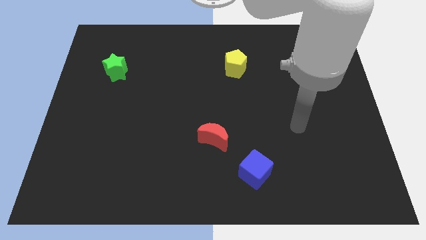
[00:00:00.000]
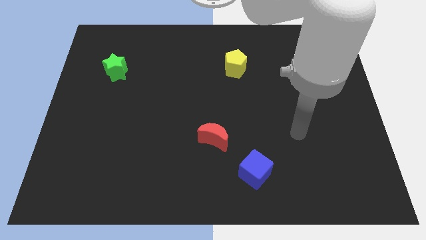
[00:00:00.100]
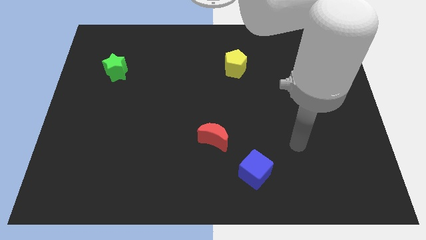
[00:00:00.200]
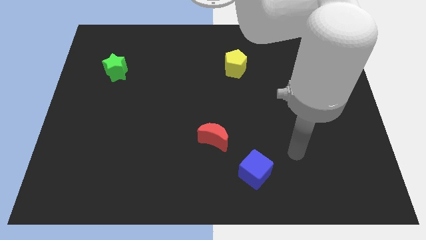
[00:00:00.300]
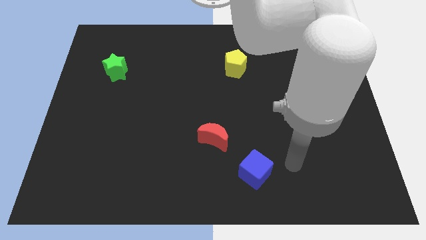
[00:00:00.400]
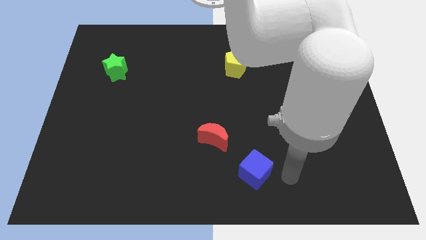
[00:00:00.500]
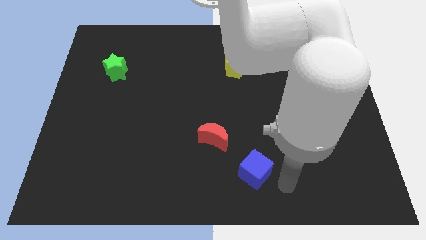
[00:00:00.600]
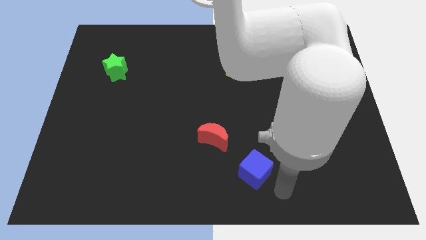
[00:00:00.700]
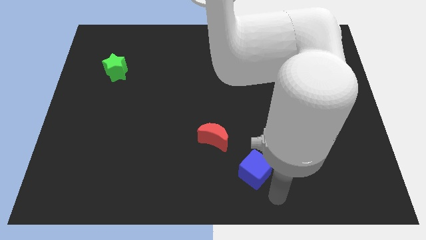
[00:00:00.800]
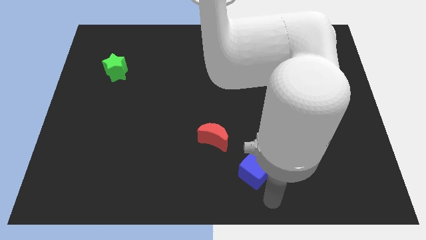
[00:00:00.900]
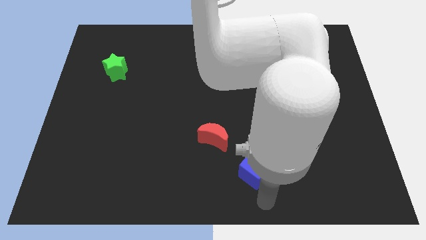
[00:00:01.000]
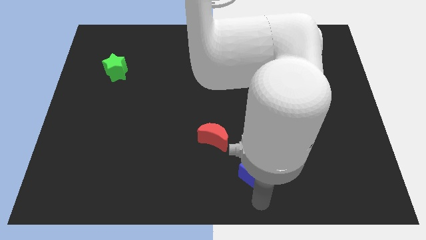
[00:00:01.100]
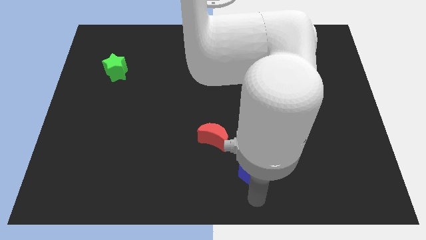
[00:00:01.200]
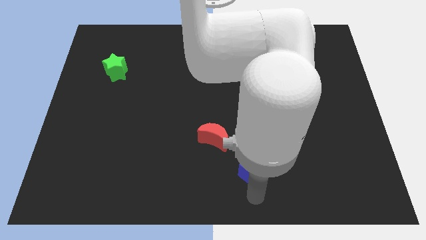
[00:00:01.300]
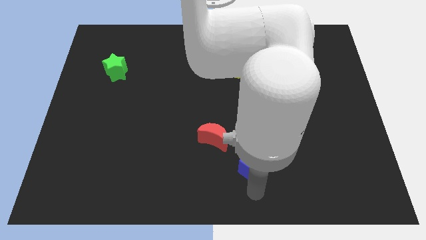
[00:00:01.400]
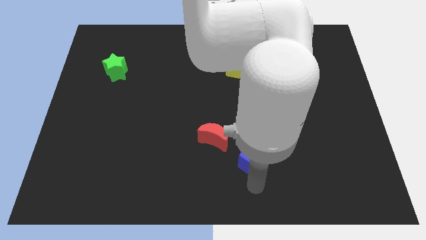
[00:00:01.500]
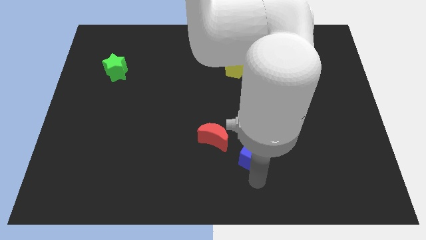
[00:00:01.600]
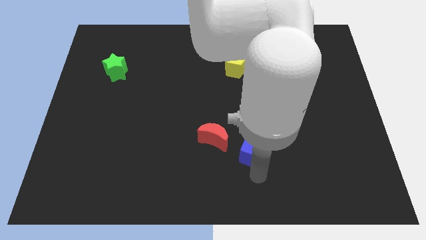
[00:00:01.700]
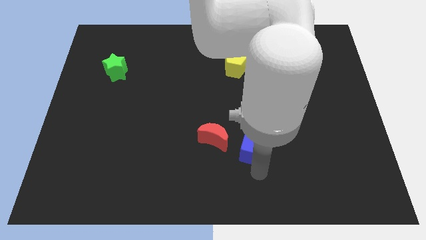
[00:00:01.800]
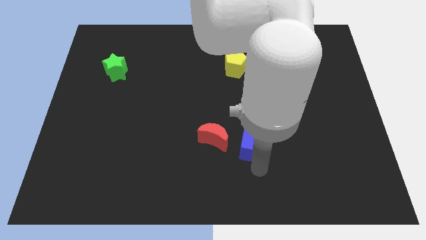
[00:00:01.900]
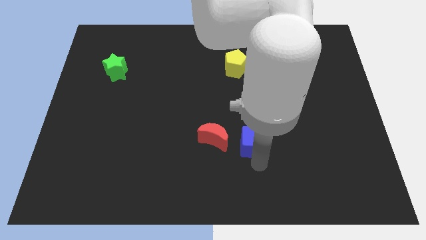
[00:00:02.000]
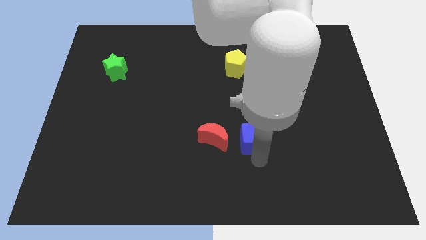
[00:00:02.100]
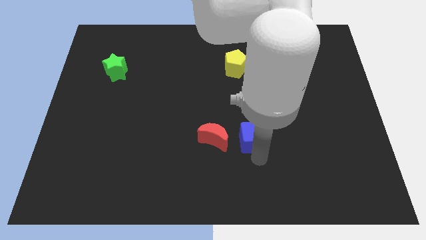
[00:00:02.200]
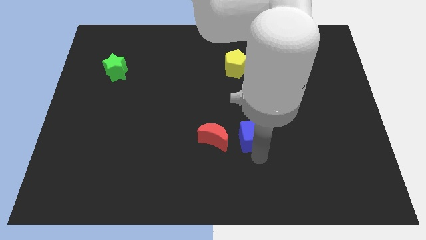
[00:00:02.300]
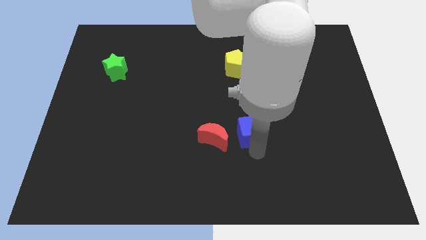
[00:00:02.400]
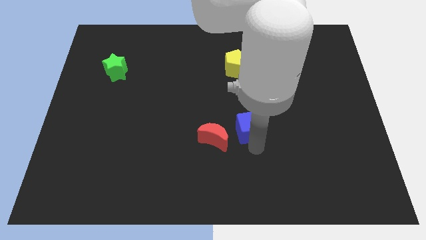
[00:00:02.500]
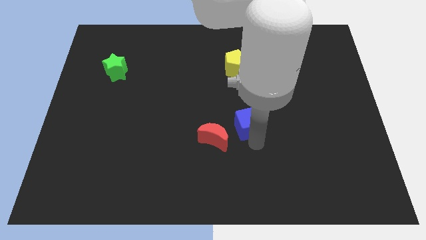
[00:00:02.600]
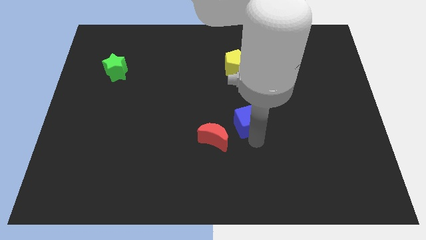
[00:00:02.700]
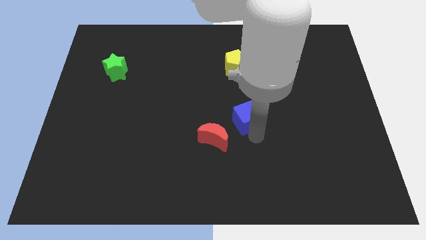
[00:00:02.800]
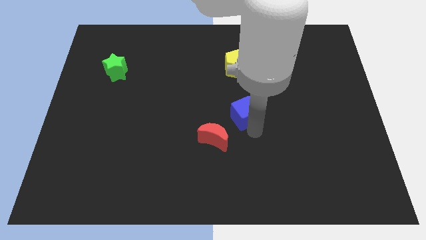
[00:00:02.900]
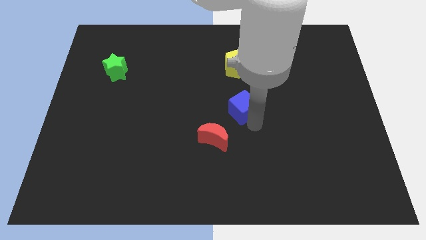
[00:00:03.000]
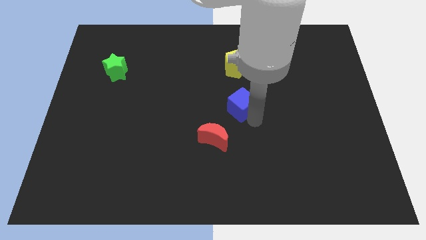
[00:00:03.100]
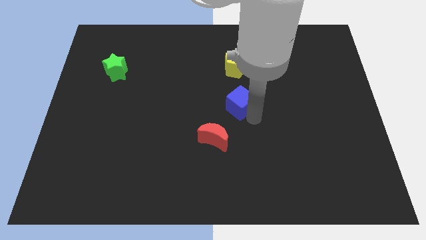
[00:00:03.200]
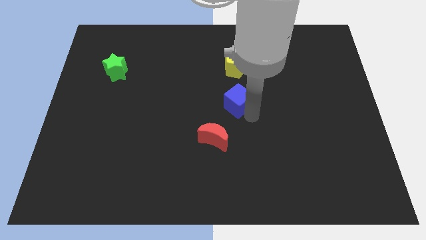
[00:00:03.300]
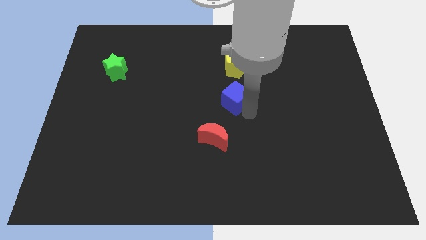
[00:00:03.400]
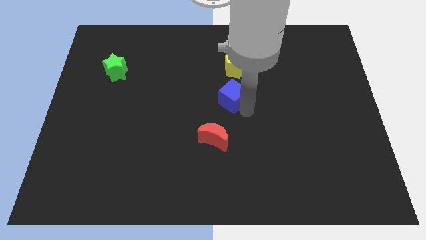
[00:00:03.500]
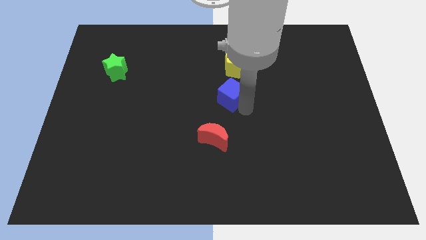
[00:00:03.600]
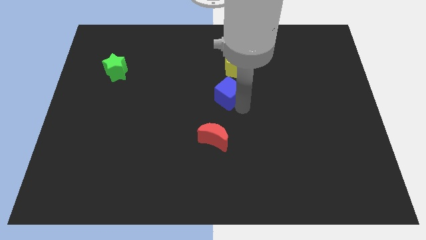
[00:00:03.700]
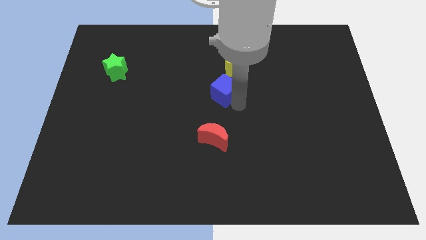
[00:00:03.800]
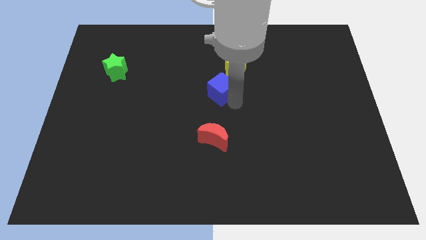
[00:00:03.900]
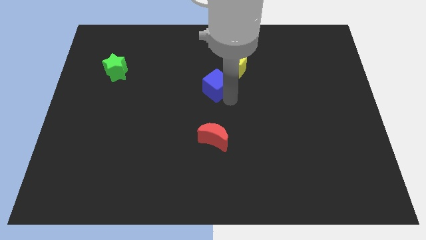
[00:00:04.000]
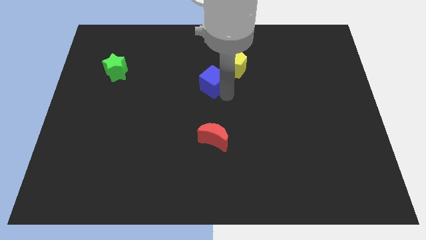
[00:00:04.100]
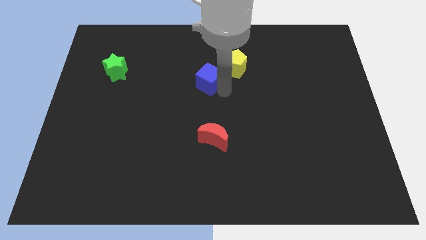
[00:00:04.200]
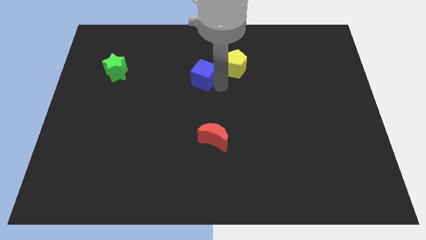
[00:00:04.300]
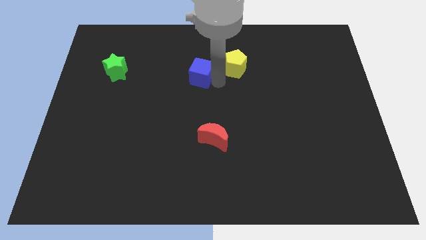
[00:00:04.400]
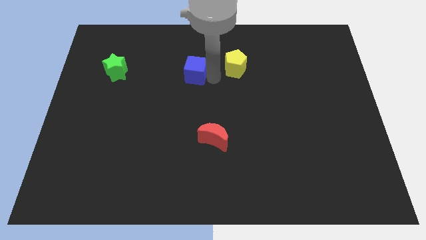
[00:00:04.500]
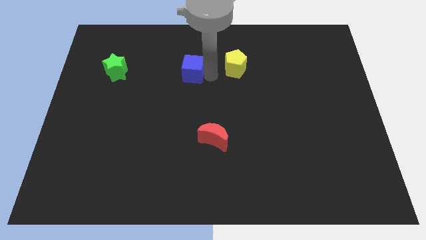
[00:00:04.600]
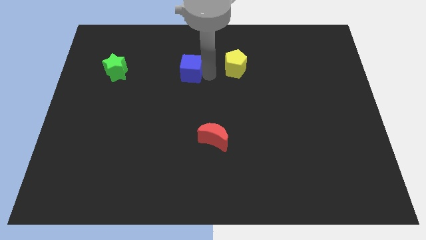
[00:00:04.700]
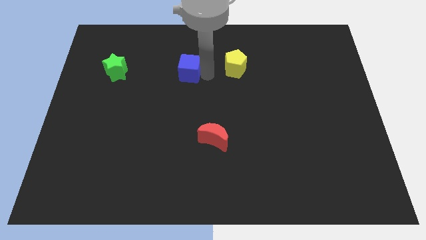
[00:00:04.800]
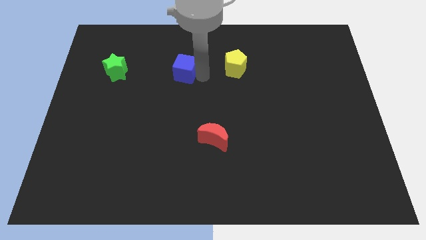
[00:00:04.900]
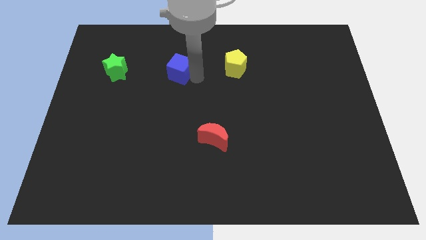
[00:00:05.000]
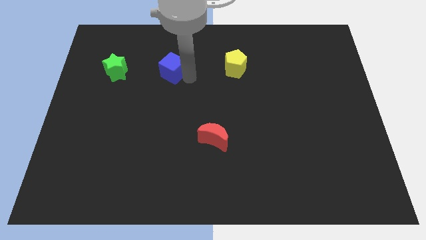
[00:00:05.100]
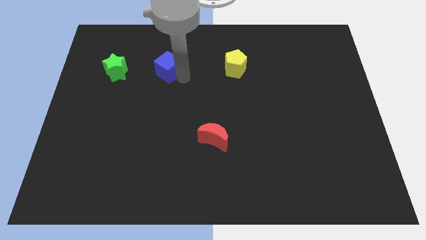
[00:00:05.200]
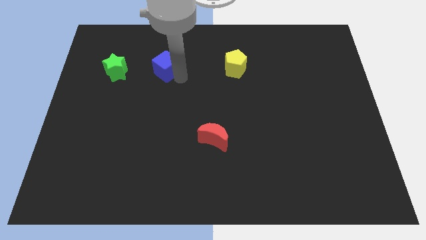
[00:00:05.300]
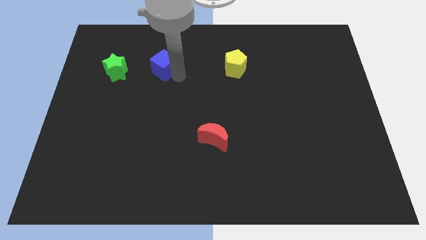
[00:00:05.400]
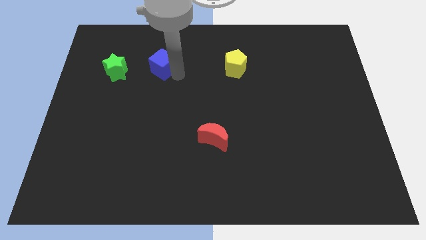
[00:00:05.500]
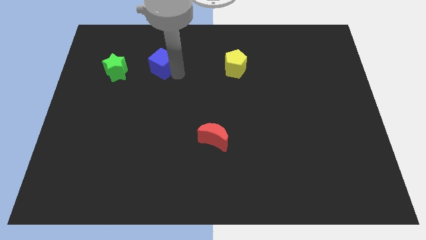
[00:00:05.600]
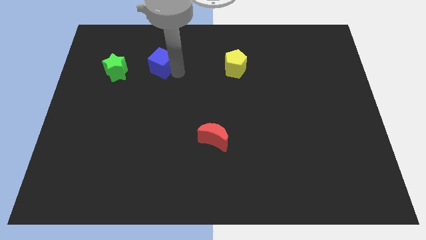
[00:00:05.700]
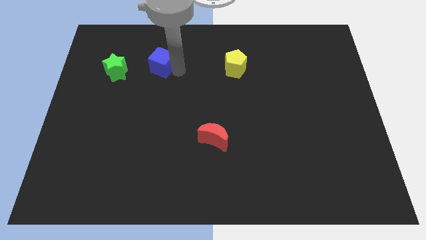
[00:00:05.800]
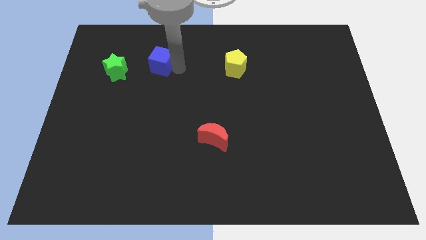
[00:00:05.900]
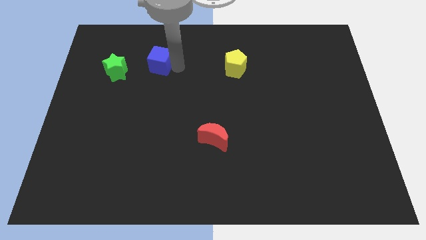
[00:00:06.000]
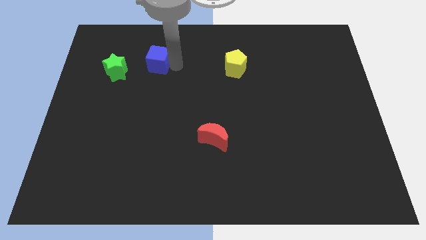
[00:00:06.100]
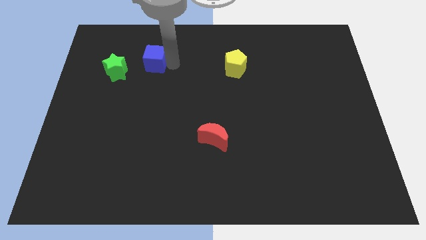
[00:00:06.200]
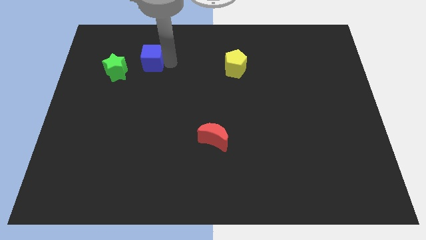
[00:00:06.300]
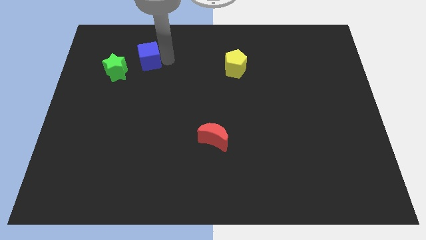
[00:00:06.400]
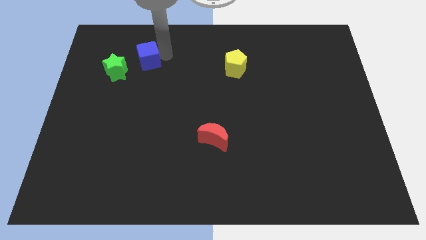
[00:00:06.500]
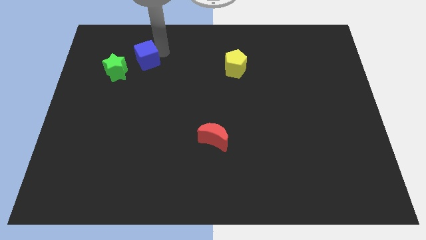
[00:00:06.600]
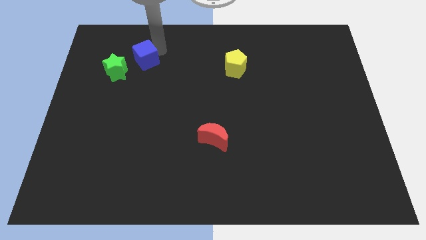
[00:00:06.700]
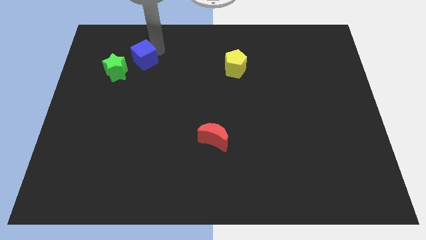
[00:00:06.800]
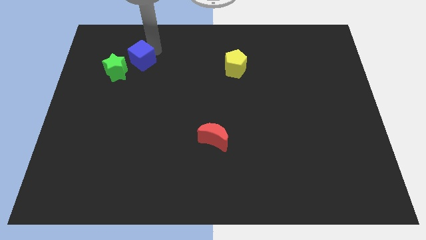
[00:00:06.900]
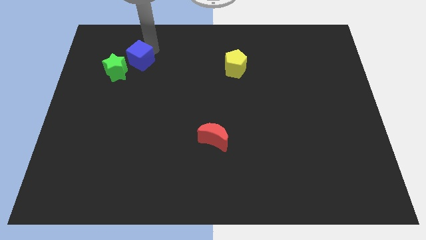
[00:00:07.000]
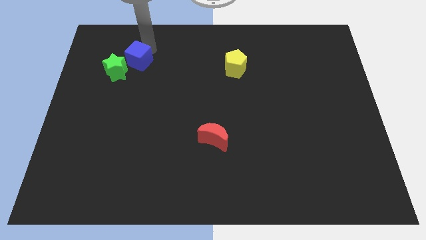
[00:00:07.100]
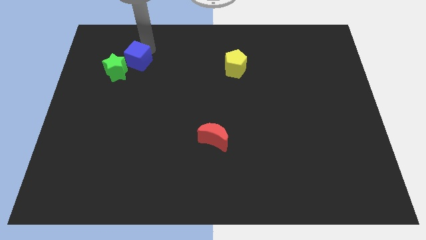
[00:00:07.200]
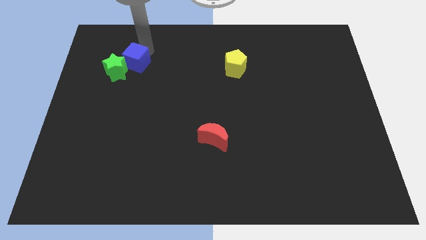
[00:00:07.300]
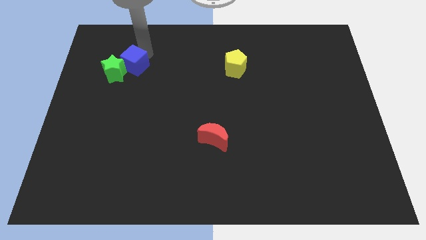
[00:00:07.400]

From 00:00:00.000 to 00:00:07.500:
push the cube next to the green block

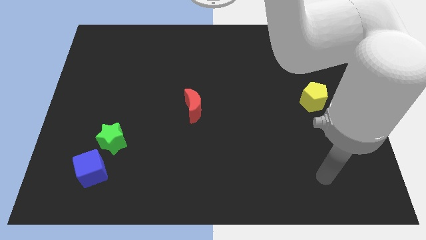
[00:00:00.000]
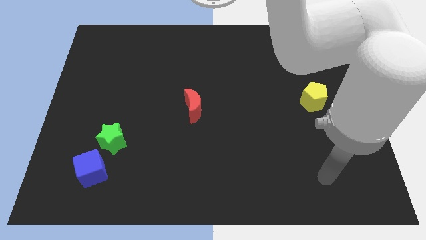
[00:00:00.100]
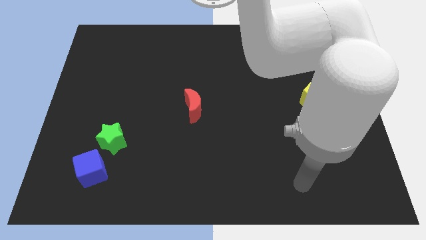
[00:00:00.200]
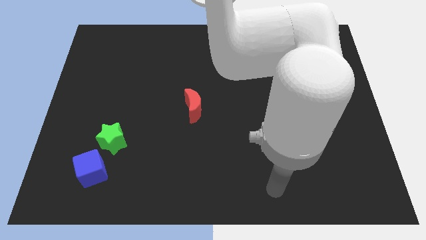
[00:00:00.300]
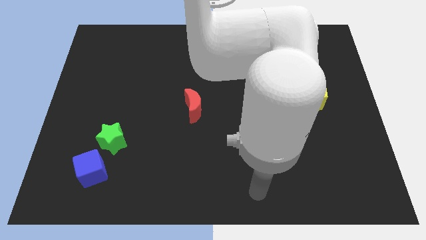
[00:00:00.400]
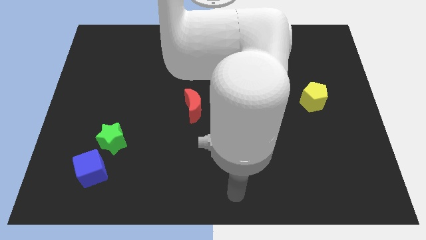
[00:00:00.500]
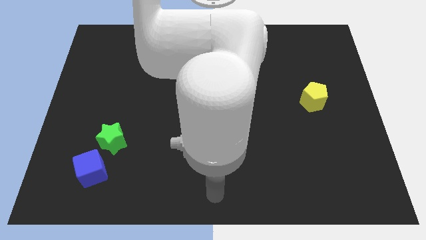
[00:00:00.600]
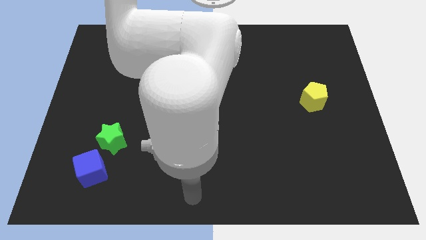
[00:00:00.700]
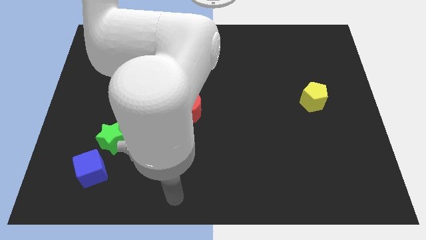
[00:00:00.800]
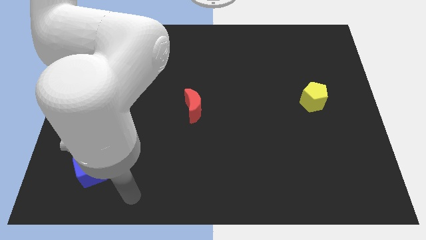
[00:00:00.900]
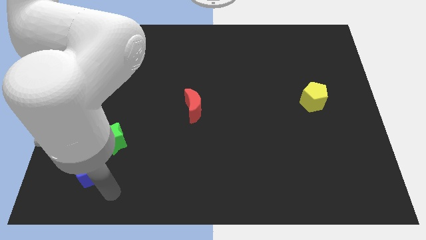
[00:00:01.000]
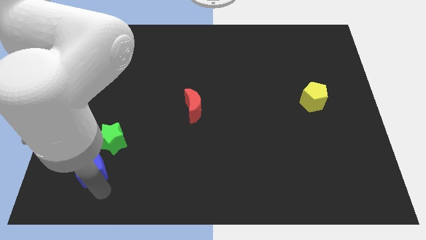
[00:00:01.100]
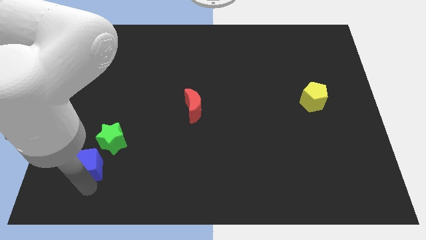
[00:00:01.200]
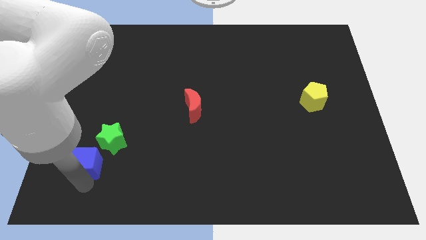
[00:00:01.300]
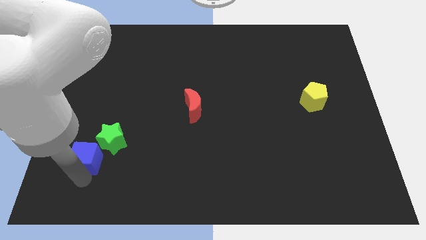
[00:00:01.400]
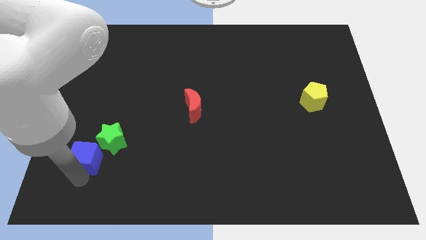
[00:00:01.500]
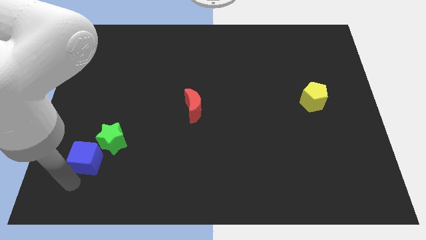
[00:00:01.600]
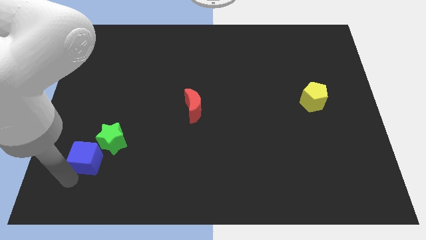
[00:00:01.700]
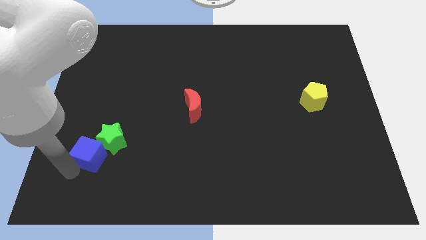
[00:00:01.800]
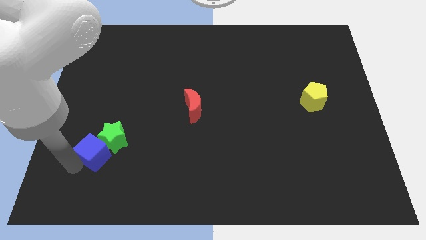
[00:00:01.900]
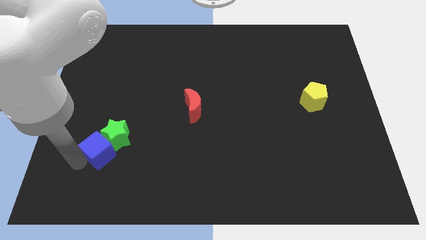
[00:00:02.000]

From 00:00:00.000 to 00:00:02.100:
move the blue block close to the green star
